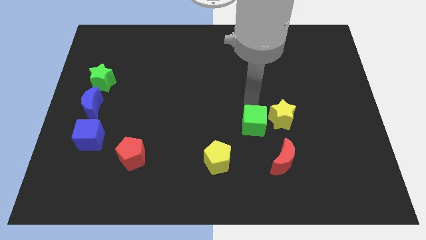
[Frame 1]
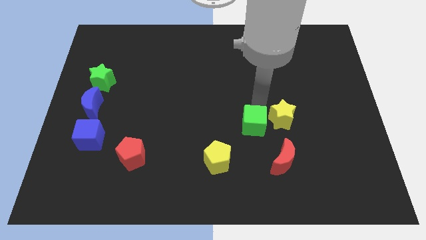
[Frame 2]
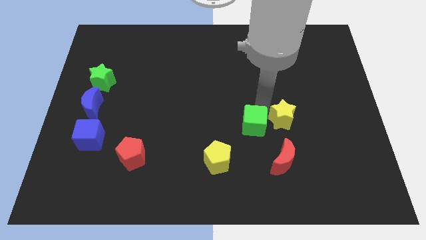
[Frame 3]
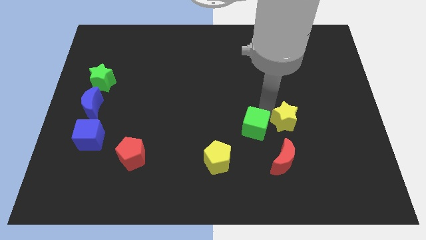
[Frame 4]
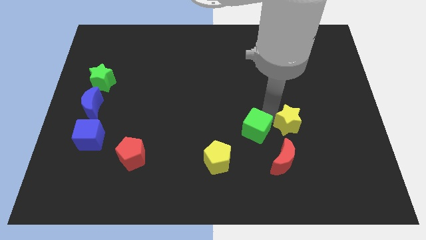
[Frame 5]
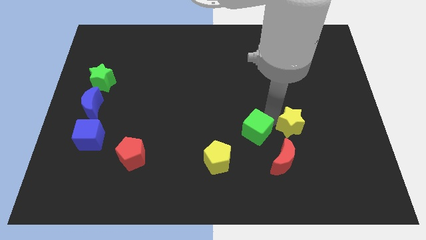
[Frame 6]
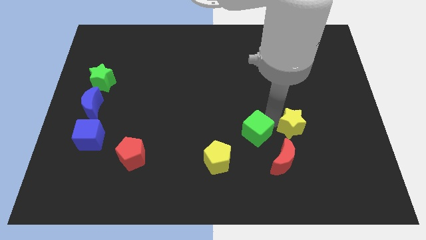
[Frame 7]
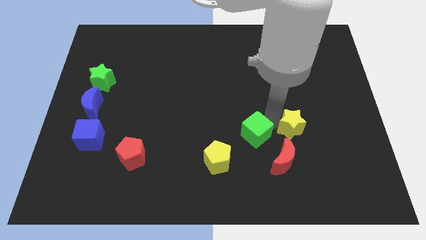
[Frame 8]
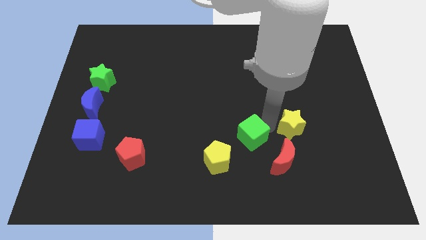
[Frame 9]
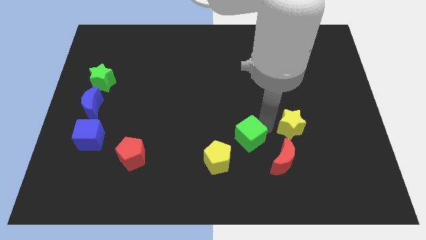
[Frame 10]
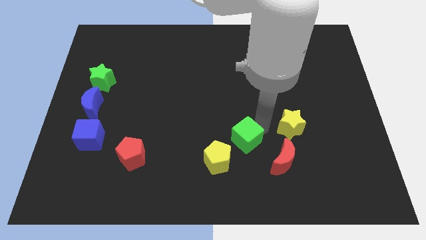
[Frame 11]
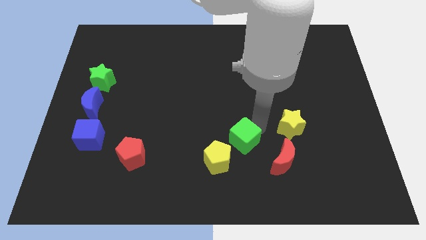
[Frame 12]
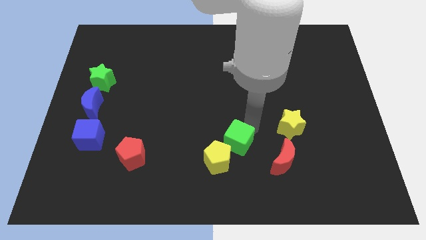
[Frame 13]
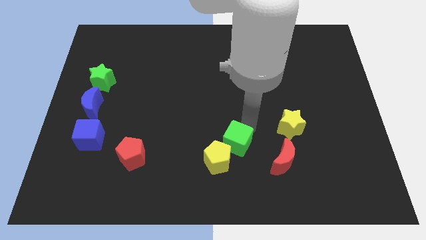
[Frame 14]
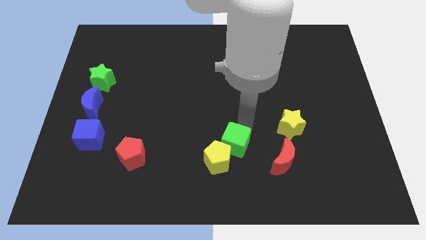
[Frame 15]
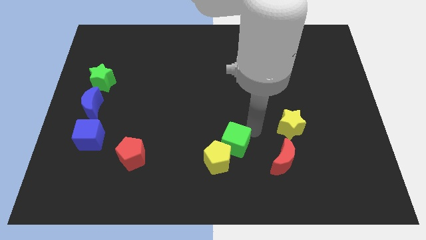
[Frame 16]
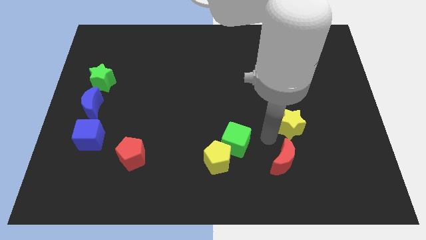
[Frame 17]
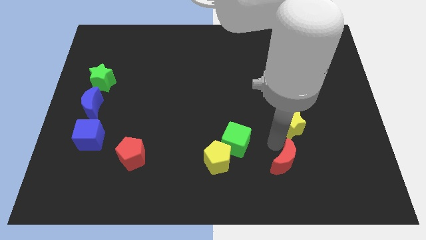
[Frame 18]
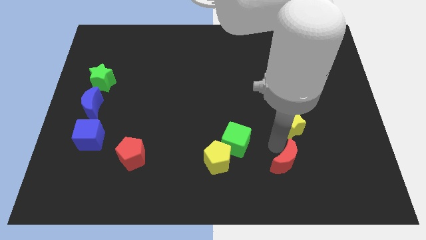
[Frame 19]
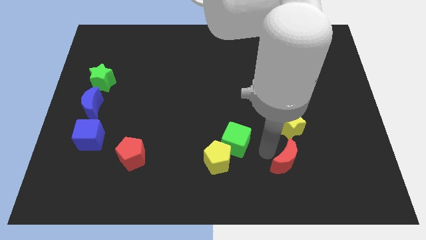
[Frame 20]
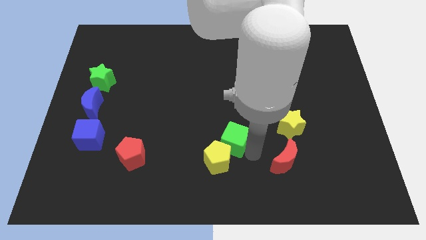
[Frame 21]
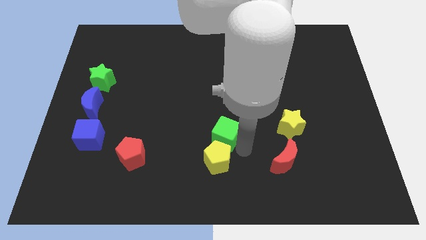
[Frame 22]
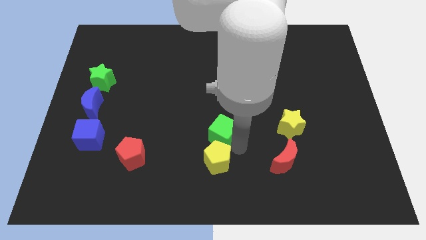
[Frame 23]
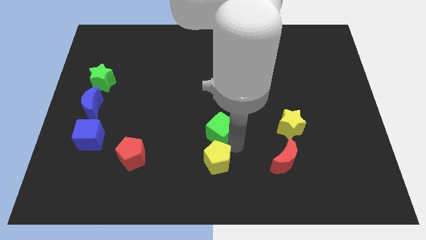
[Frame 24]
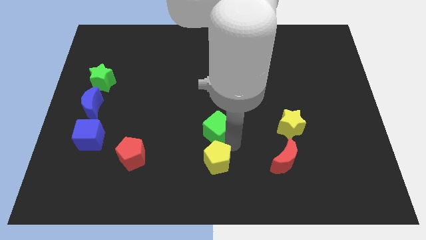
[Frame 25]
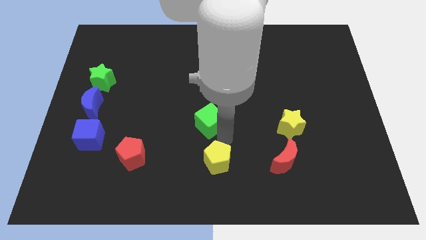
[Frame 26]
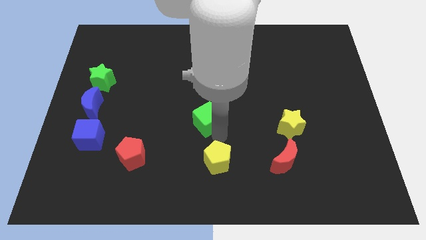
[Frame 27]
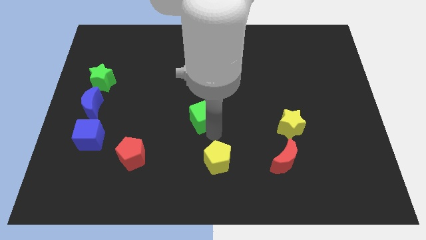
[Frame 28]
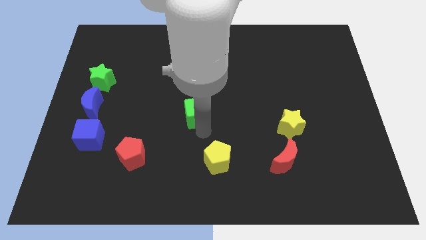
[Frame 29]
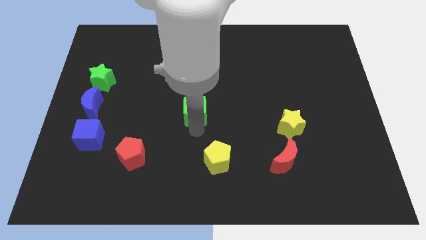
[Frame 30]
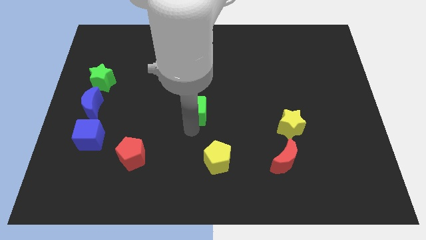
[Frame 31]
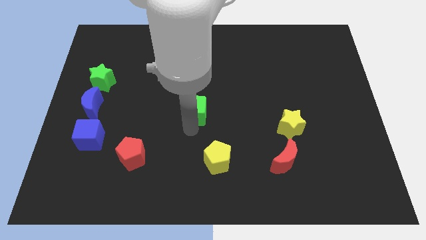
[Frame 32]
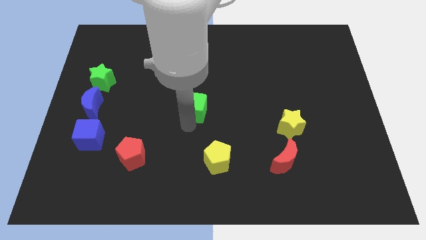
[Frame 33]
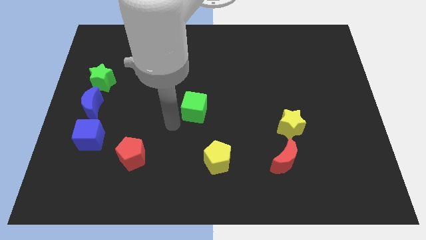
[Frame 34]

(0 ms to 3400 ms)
slide the green cube diagonally top left to the yellow pentagon

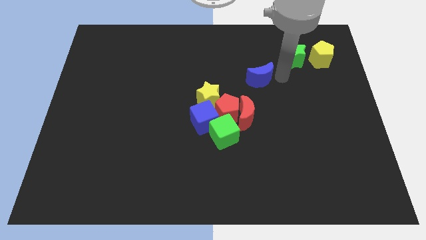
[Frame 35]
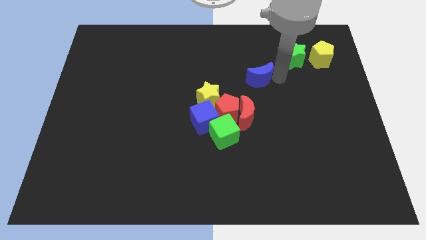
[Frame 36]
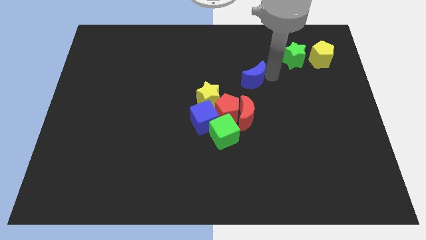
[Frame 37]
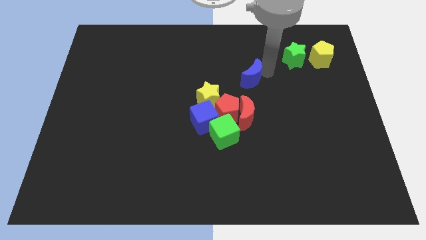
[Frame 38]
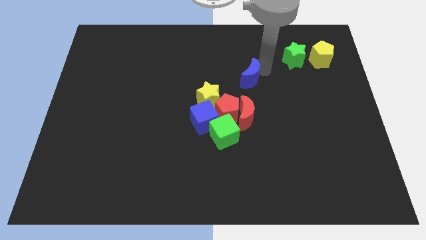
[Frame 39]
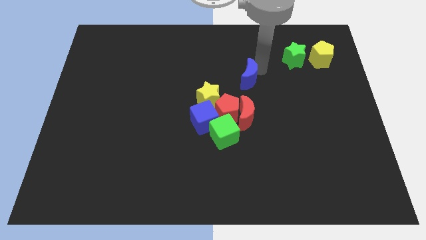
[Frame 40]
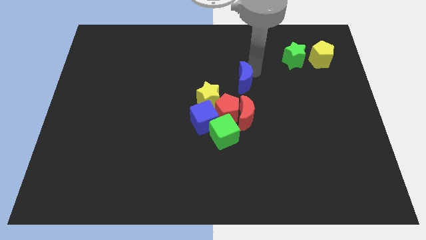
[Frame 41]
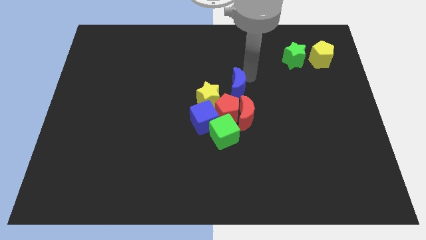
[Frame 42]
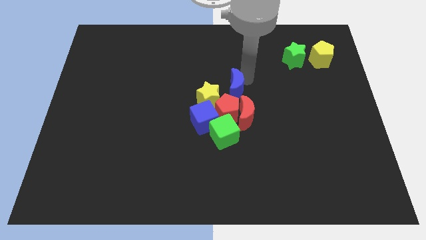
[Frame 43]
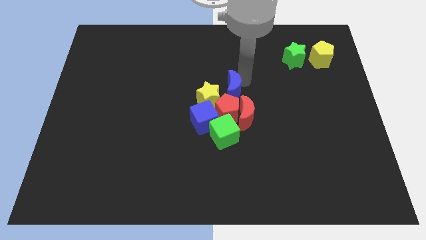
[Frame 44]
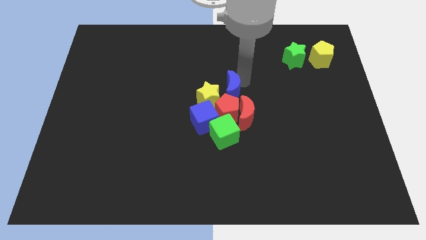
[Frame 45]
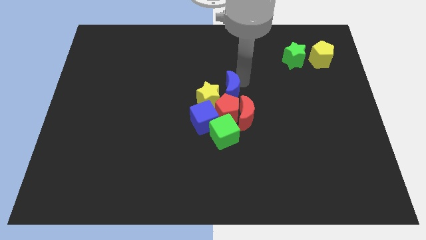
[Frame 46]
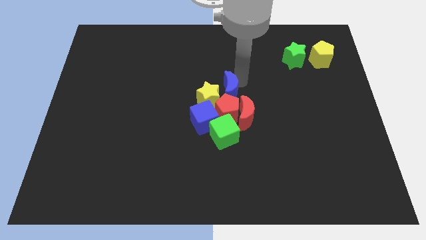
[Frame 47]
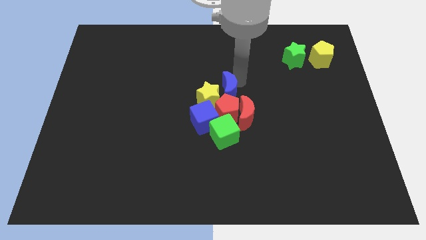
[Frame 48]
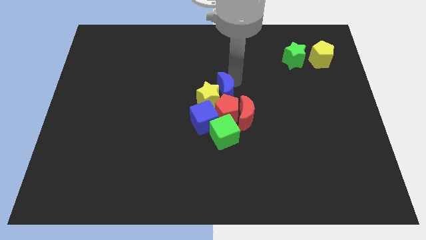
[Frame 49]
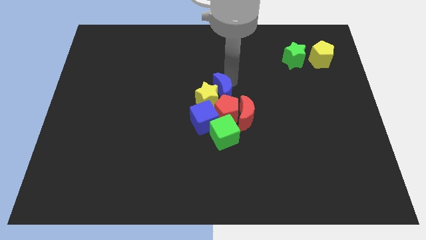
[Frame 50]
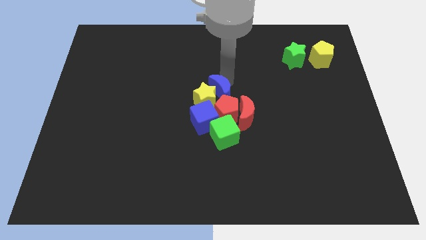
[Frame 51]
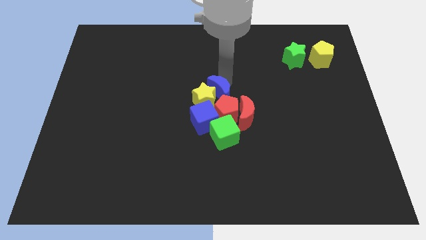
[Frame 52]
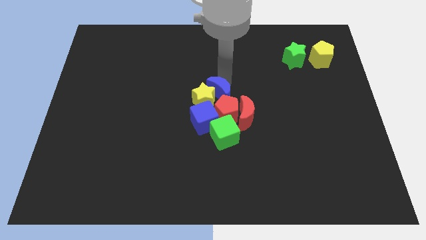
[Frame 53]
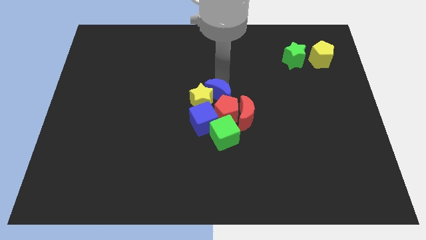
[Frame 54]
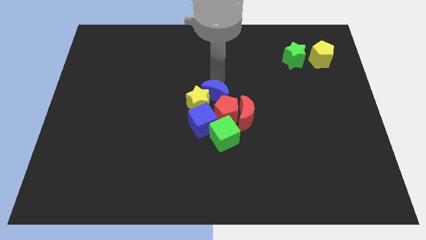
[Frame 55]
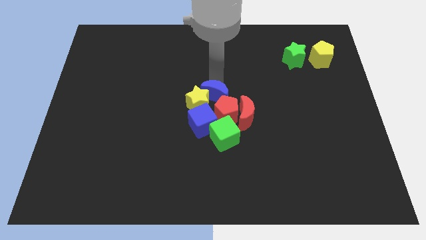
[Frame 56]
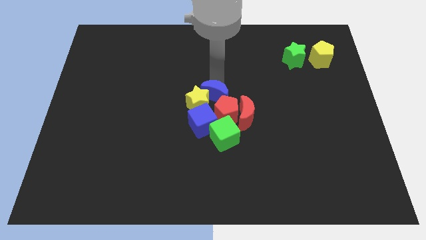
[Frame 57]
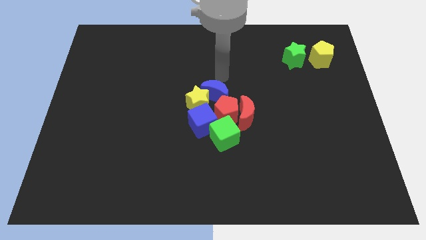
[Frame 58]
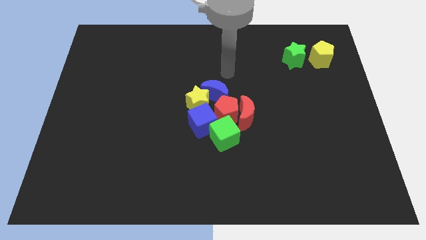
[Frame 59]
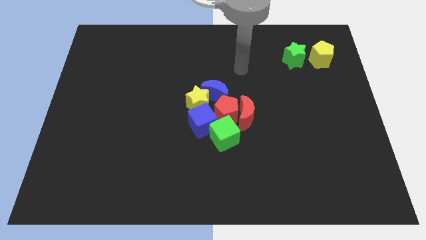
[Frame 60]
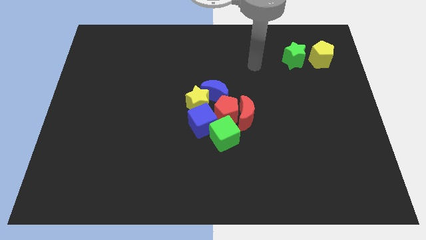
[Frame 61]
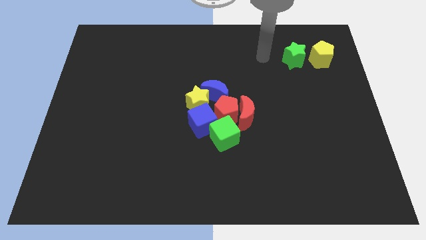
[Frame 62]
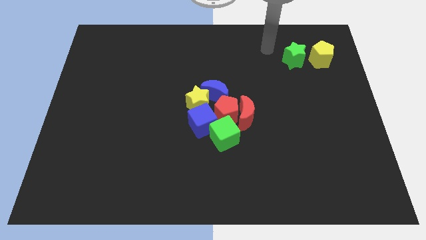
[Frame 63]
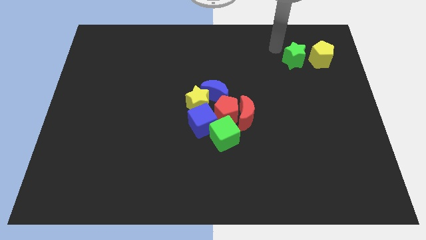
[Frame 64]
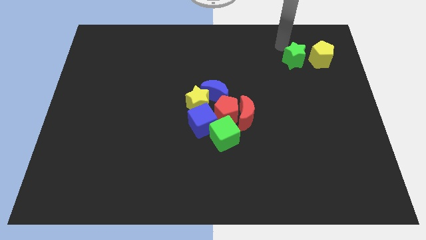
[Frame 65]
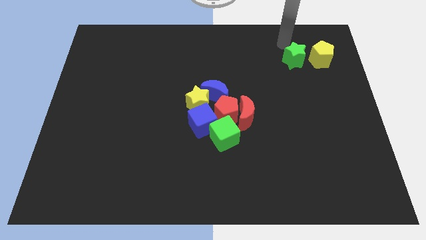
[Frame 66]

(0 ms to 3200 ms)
push the blue crescent towards the center of the board

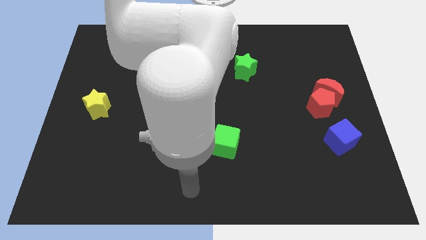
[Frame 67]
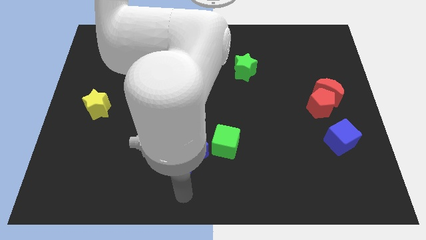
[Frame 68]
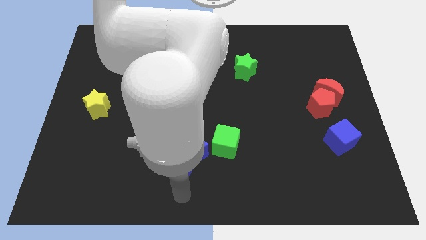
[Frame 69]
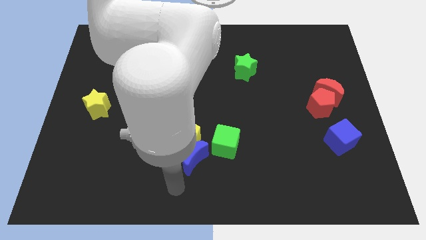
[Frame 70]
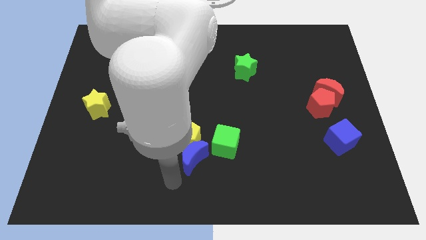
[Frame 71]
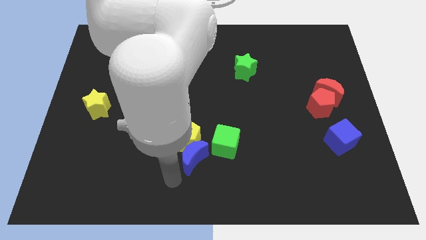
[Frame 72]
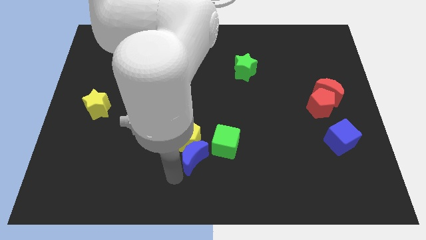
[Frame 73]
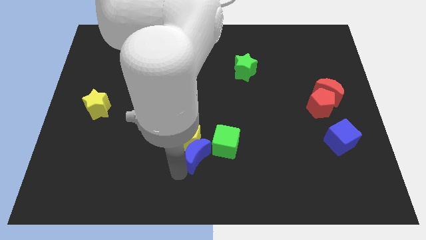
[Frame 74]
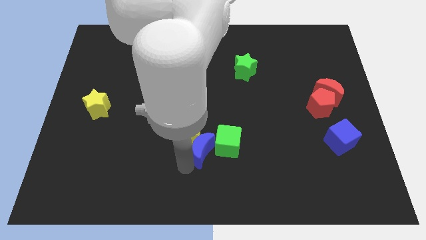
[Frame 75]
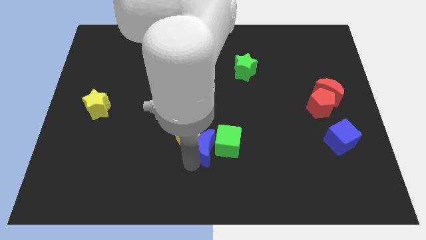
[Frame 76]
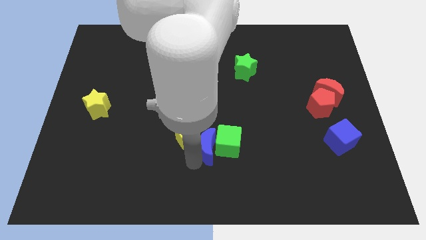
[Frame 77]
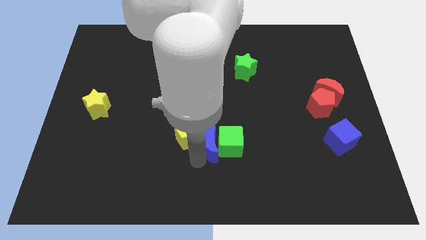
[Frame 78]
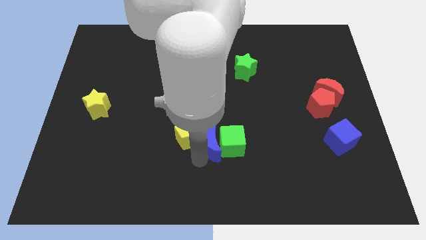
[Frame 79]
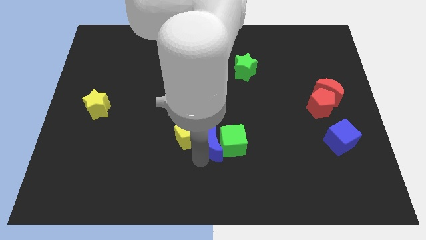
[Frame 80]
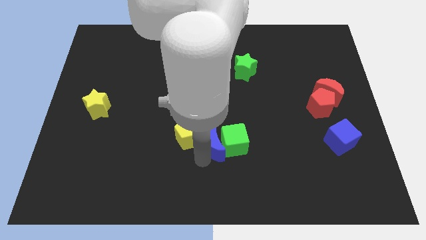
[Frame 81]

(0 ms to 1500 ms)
push the blue crescent into the middle of the green cube and yellow pentagon

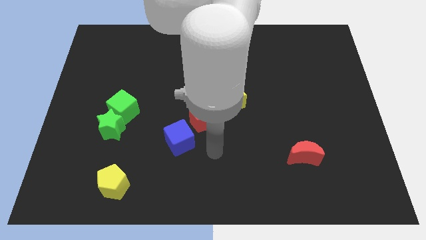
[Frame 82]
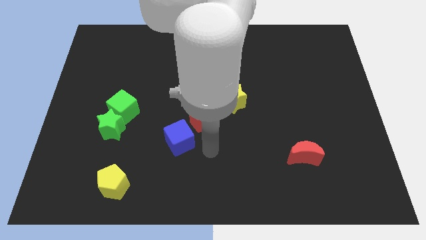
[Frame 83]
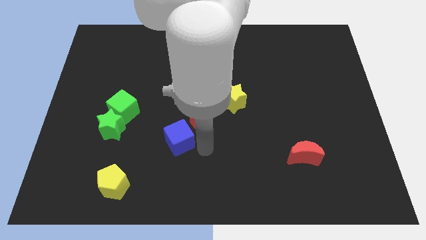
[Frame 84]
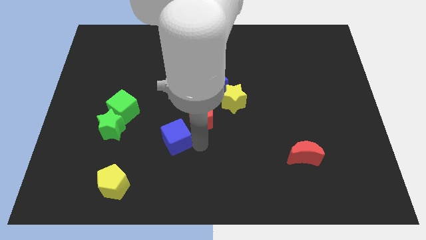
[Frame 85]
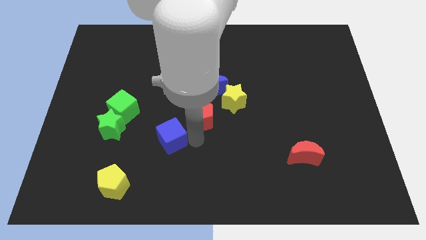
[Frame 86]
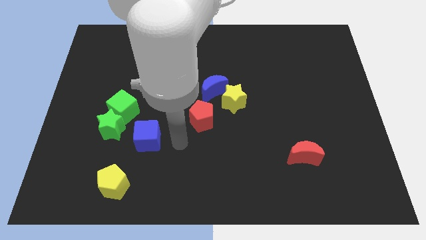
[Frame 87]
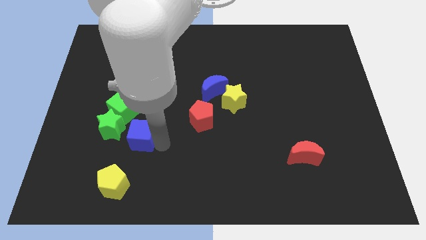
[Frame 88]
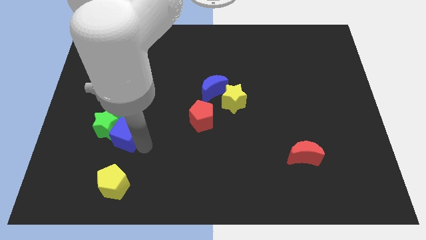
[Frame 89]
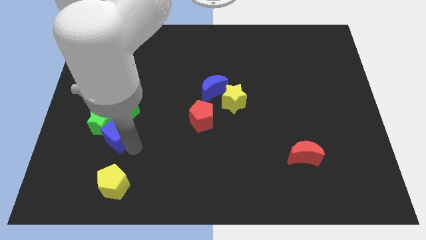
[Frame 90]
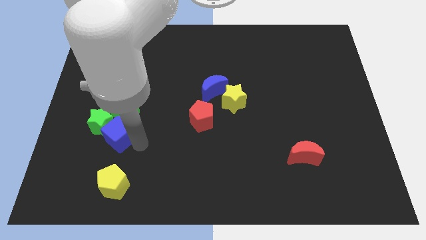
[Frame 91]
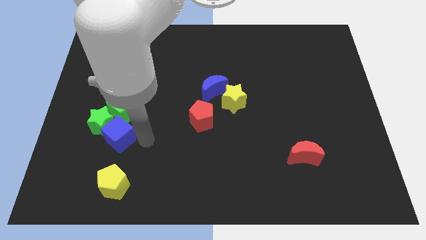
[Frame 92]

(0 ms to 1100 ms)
push the blue cube into the green star
